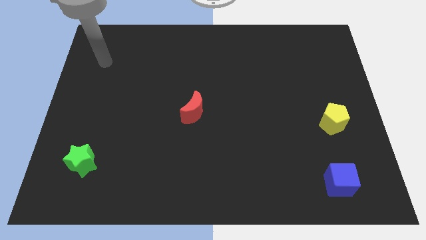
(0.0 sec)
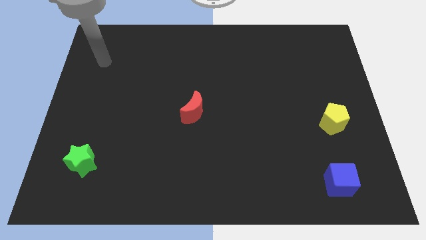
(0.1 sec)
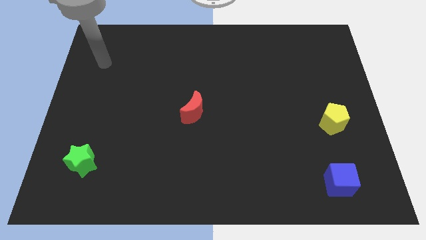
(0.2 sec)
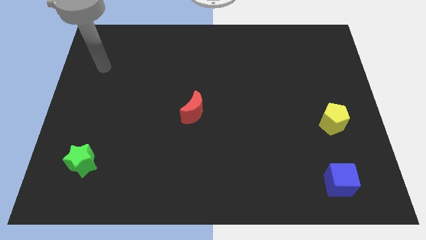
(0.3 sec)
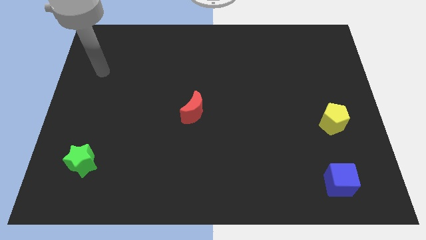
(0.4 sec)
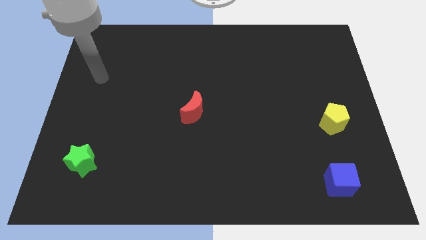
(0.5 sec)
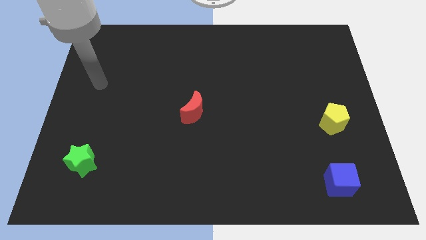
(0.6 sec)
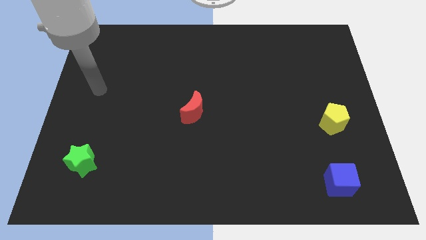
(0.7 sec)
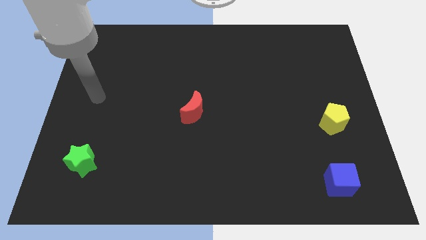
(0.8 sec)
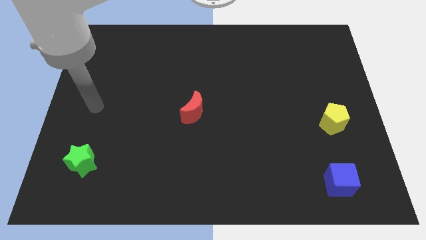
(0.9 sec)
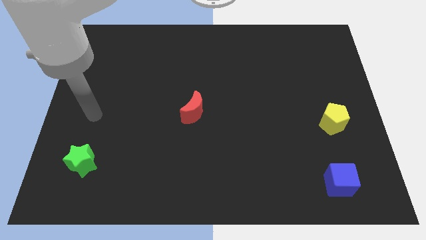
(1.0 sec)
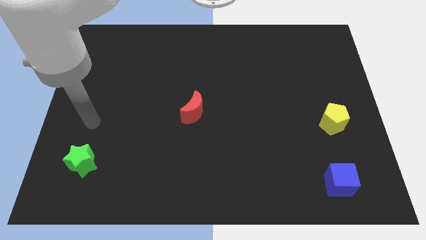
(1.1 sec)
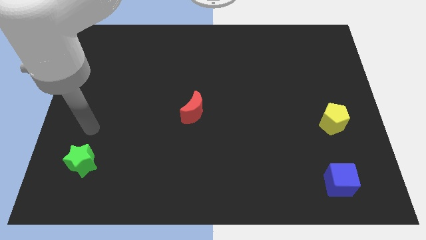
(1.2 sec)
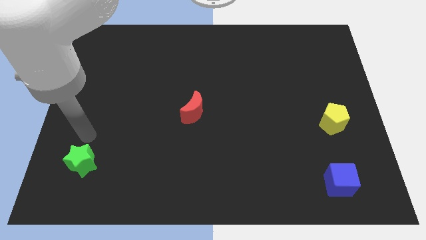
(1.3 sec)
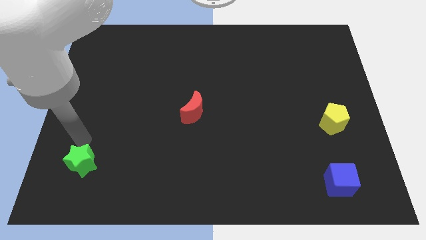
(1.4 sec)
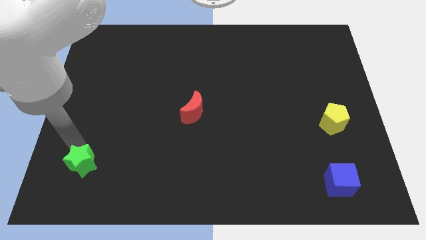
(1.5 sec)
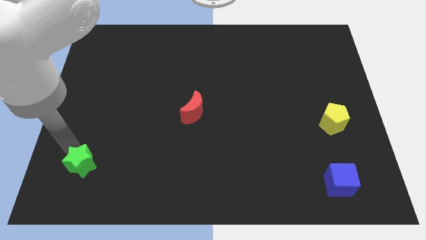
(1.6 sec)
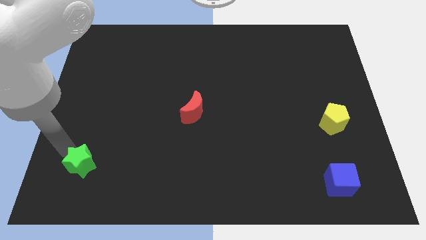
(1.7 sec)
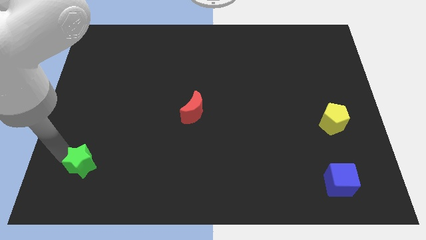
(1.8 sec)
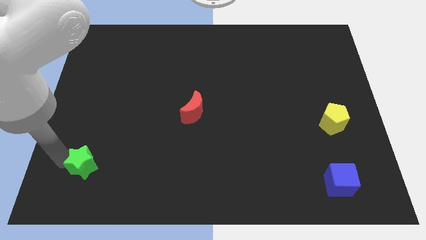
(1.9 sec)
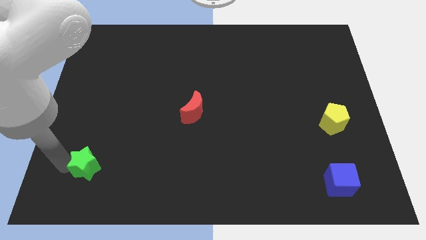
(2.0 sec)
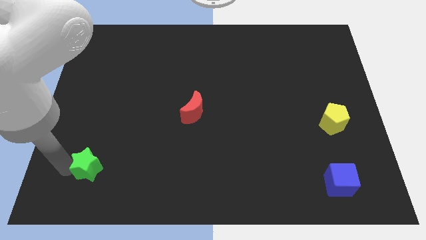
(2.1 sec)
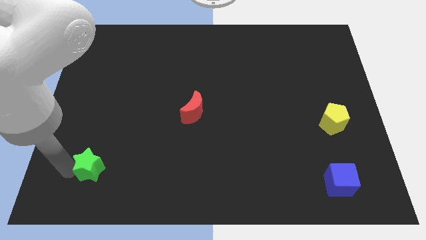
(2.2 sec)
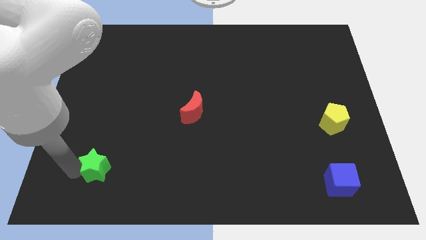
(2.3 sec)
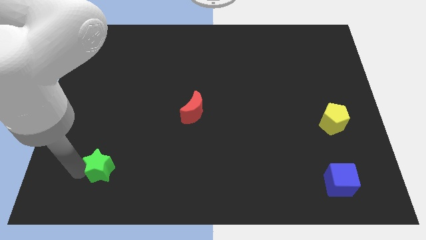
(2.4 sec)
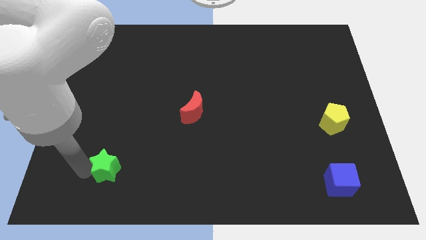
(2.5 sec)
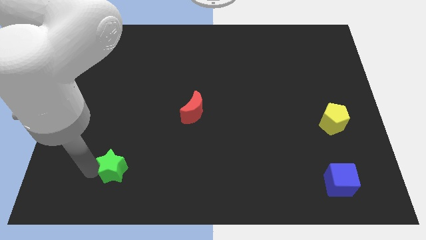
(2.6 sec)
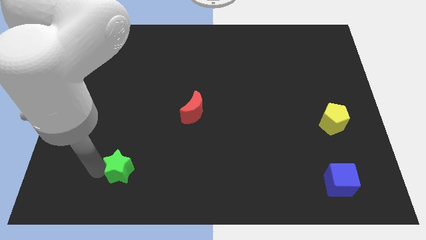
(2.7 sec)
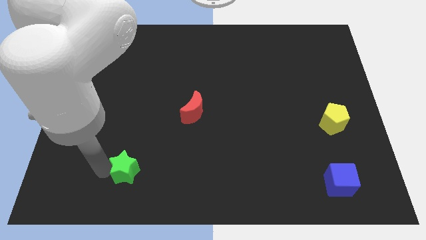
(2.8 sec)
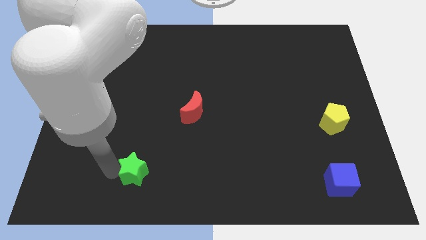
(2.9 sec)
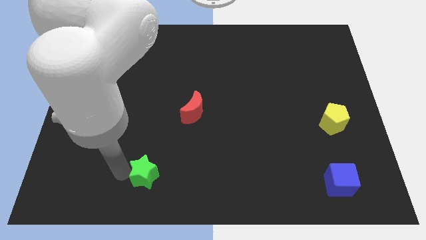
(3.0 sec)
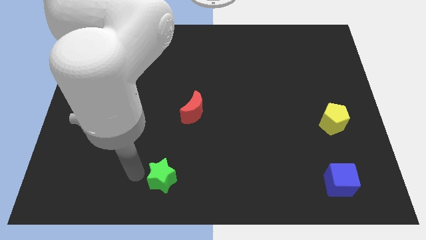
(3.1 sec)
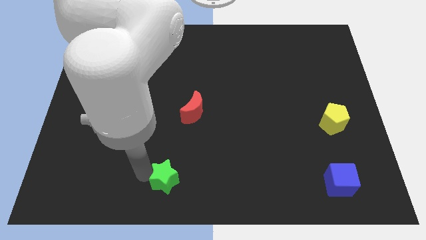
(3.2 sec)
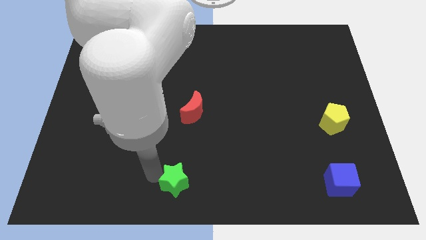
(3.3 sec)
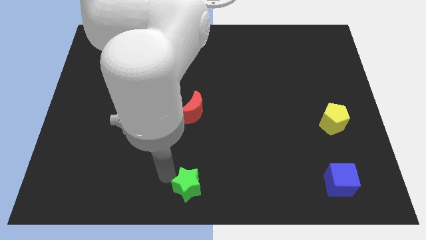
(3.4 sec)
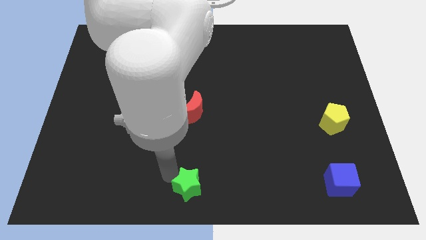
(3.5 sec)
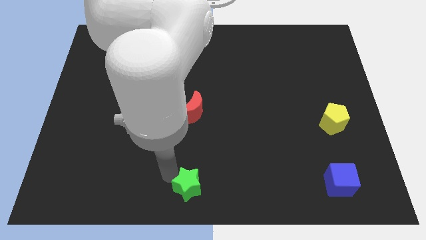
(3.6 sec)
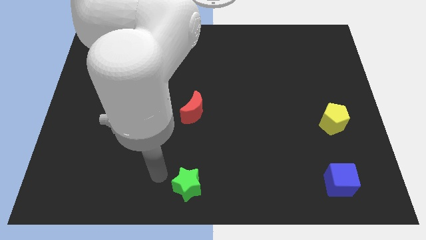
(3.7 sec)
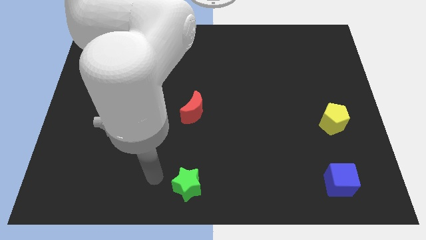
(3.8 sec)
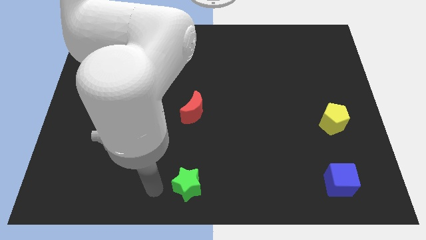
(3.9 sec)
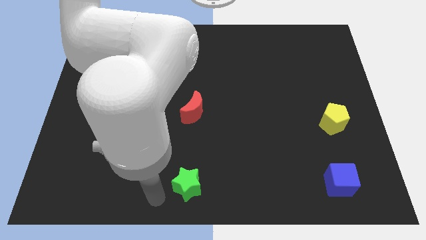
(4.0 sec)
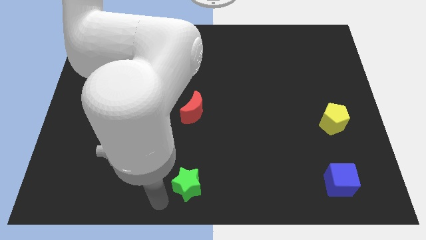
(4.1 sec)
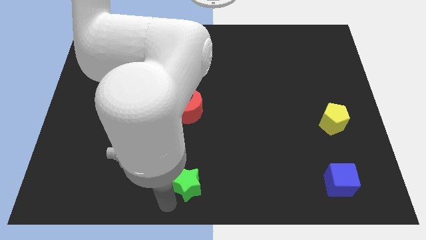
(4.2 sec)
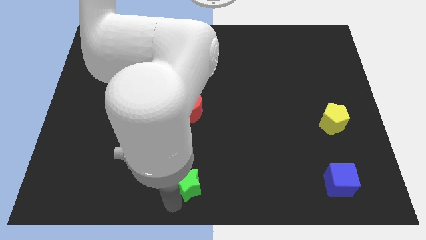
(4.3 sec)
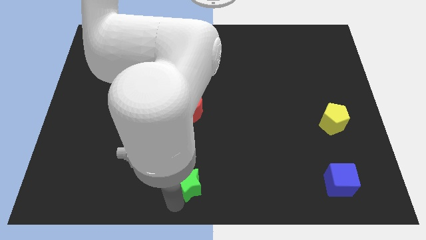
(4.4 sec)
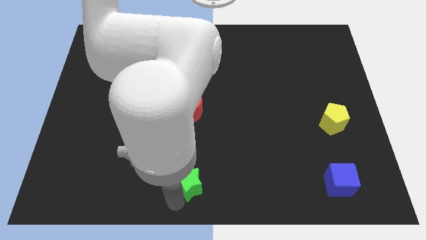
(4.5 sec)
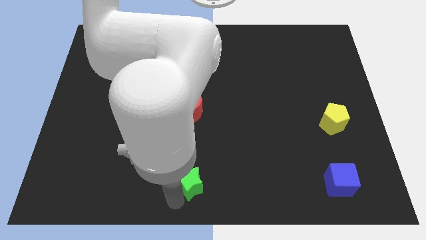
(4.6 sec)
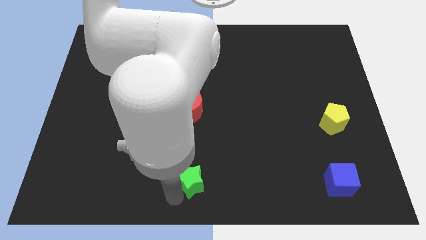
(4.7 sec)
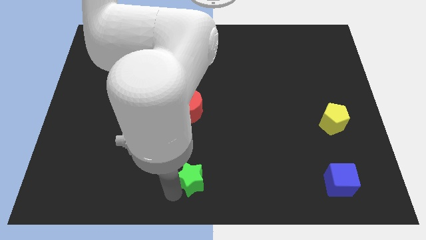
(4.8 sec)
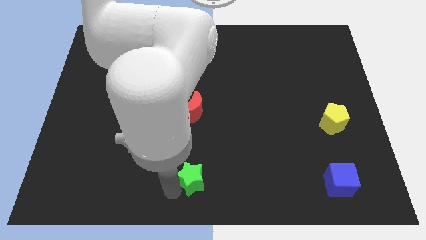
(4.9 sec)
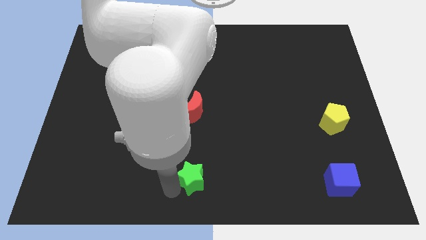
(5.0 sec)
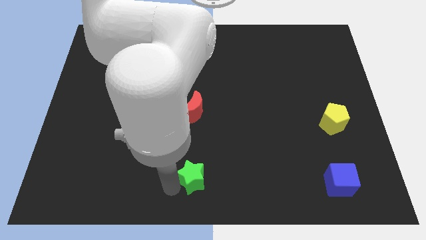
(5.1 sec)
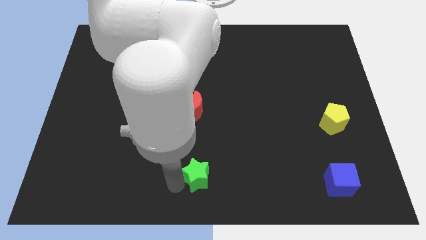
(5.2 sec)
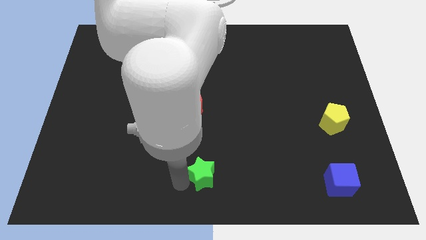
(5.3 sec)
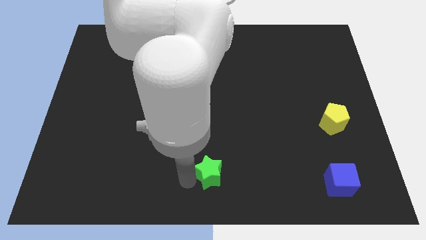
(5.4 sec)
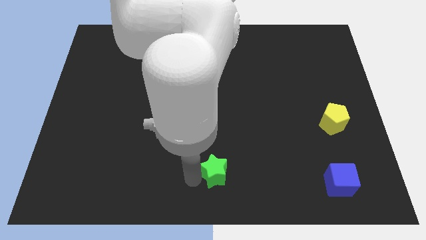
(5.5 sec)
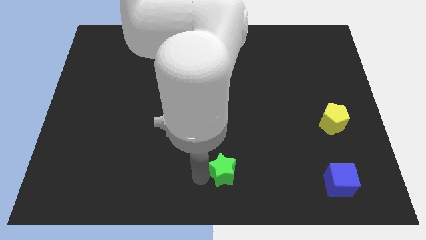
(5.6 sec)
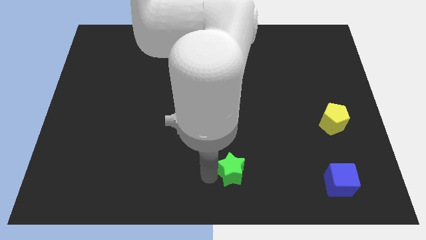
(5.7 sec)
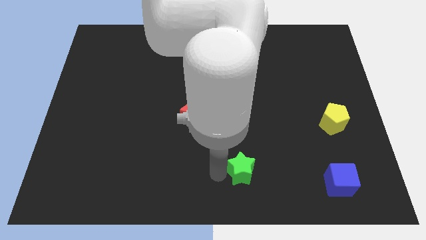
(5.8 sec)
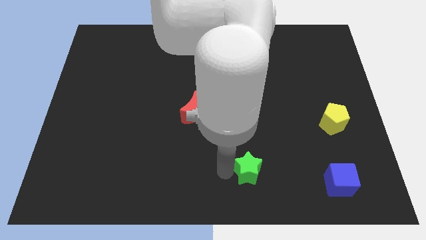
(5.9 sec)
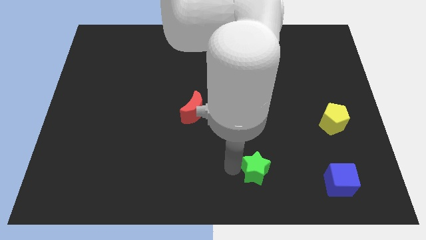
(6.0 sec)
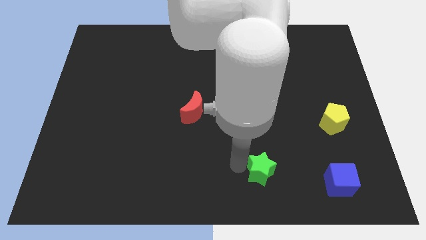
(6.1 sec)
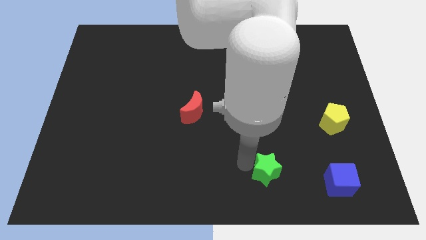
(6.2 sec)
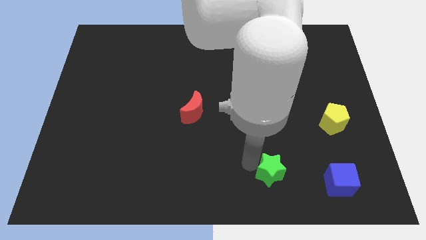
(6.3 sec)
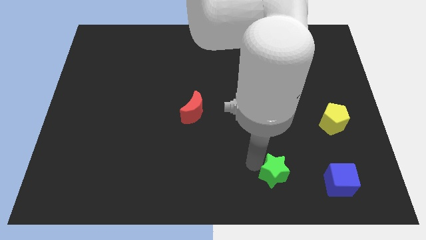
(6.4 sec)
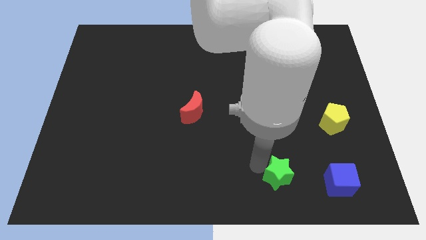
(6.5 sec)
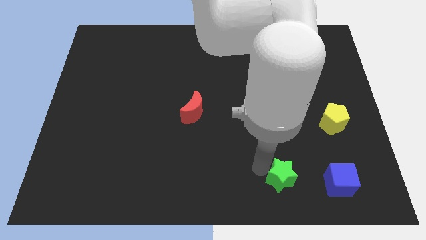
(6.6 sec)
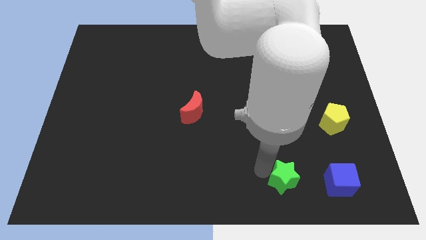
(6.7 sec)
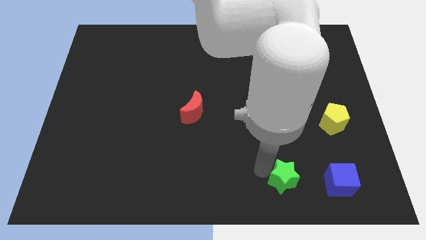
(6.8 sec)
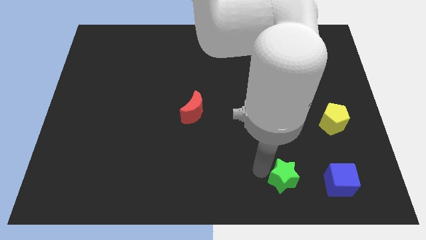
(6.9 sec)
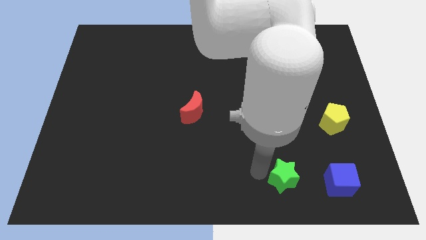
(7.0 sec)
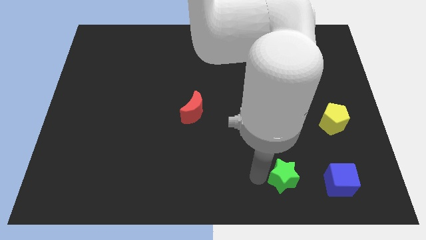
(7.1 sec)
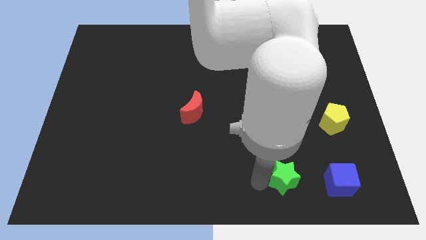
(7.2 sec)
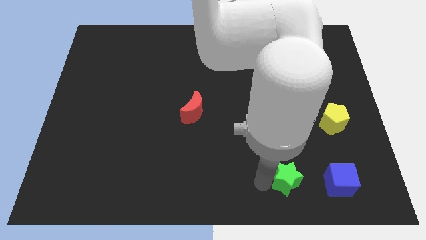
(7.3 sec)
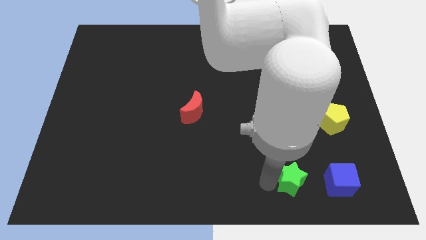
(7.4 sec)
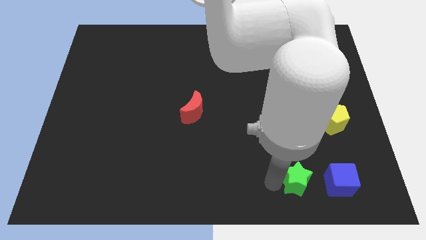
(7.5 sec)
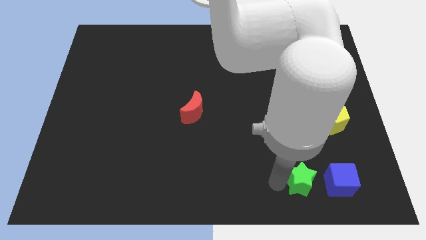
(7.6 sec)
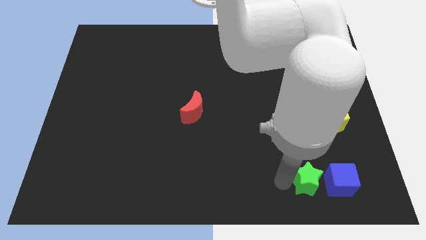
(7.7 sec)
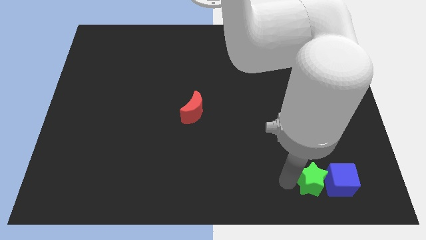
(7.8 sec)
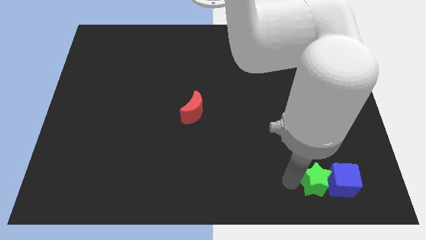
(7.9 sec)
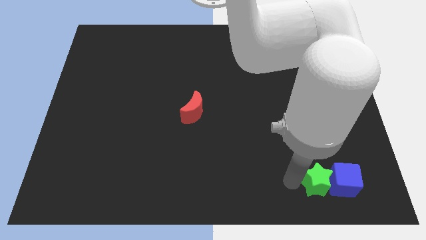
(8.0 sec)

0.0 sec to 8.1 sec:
move the green block next to the blue block

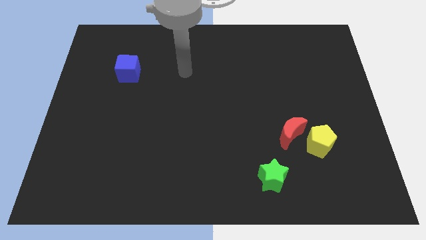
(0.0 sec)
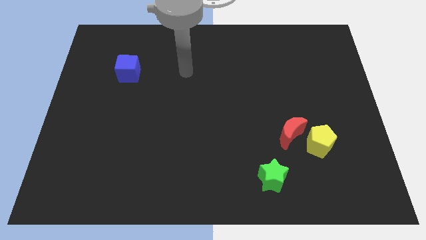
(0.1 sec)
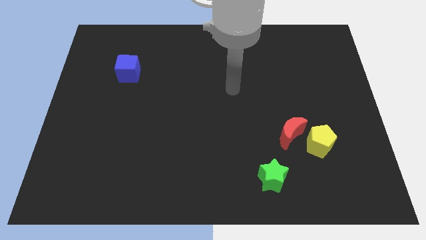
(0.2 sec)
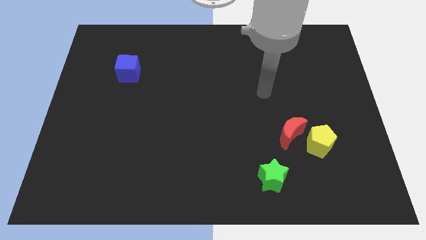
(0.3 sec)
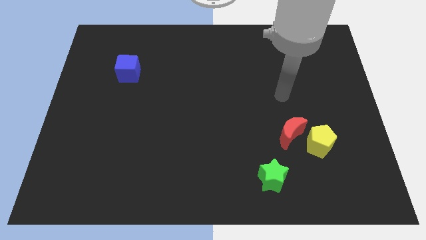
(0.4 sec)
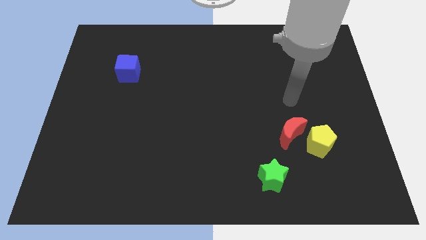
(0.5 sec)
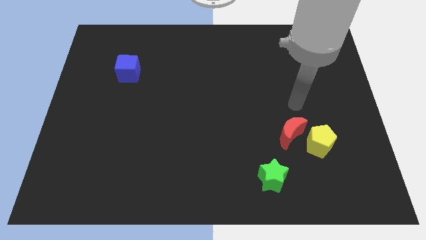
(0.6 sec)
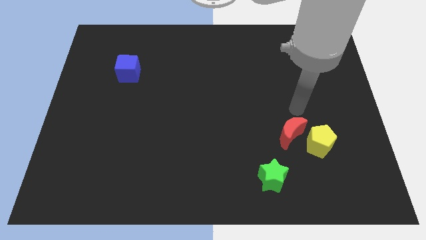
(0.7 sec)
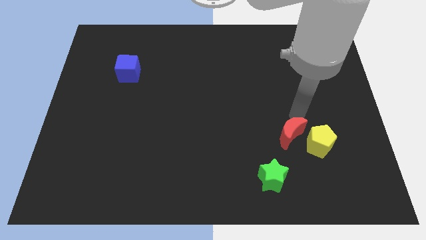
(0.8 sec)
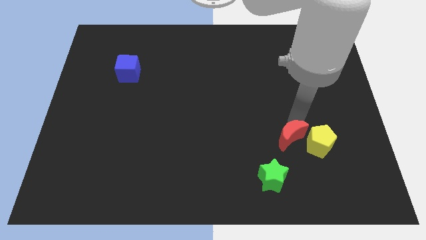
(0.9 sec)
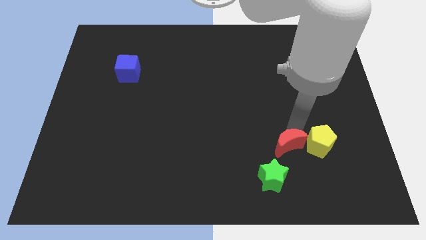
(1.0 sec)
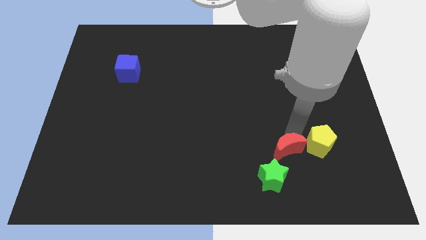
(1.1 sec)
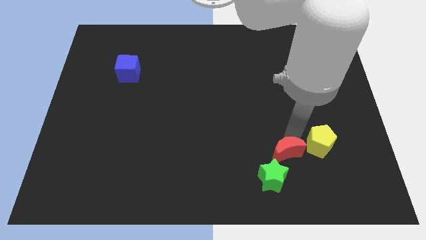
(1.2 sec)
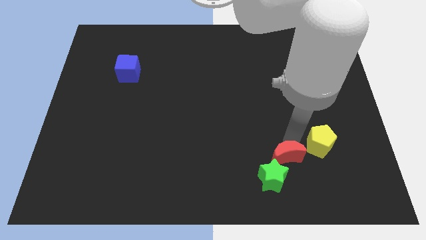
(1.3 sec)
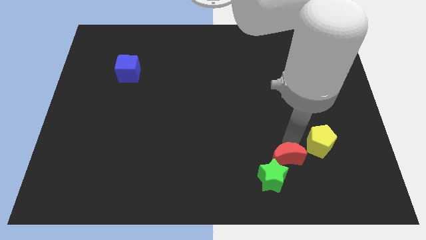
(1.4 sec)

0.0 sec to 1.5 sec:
push the red moon to the green star
